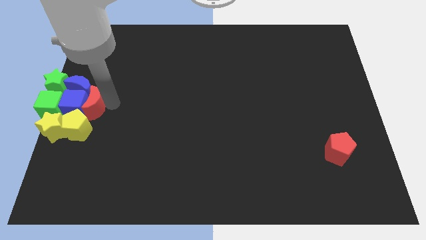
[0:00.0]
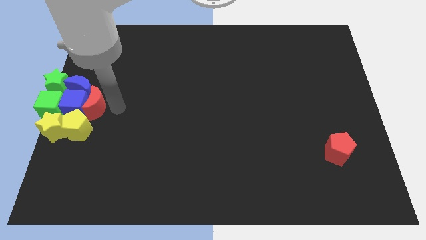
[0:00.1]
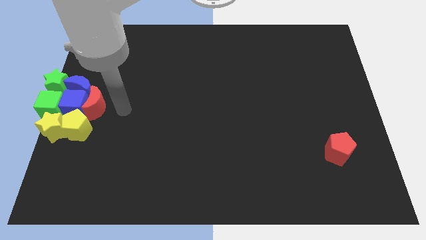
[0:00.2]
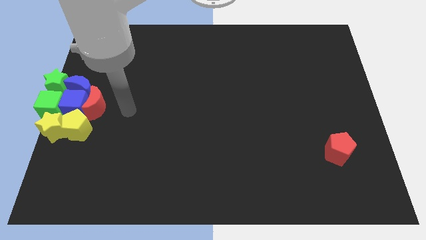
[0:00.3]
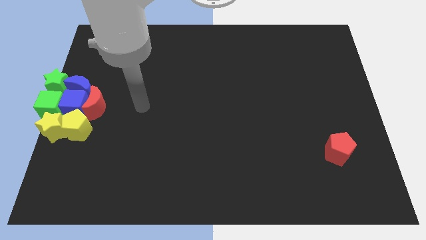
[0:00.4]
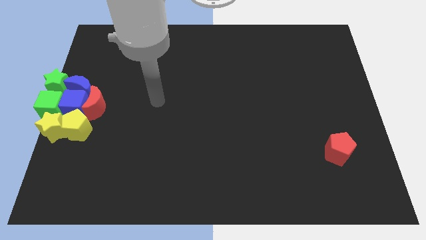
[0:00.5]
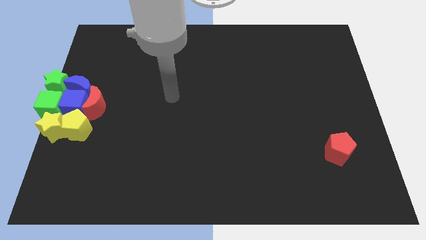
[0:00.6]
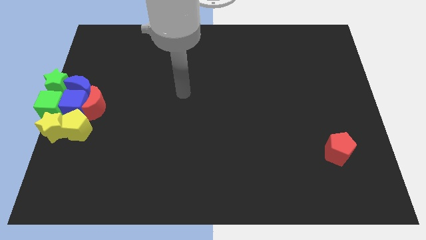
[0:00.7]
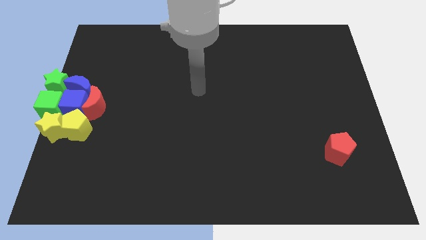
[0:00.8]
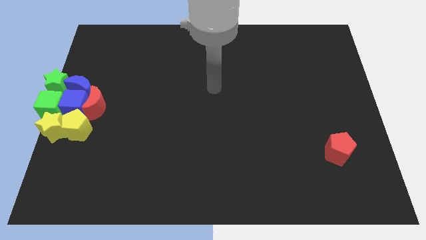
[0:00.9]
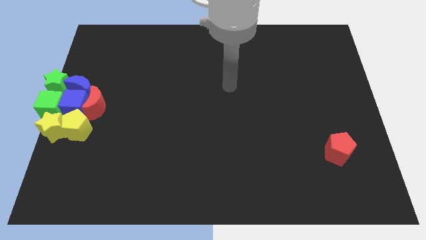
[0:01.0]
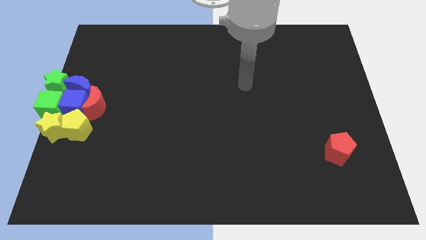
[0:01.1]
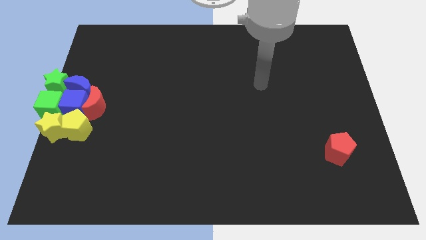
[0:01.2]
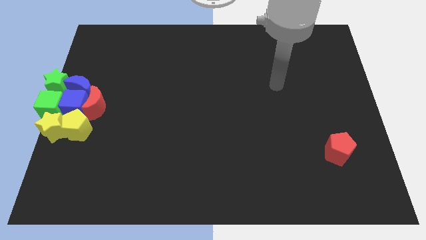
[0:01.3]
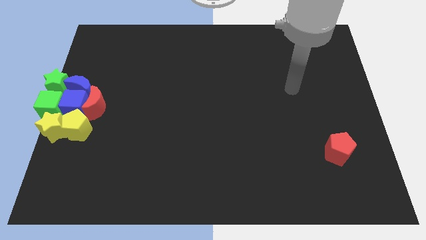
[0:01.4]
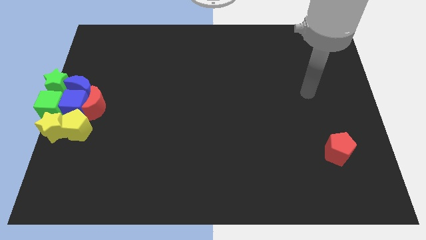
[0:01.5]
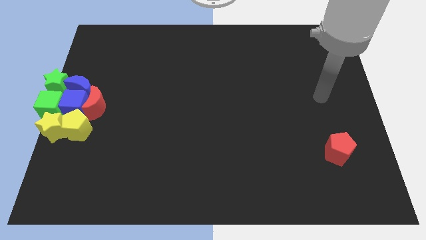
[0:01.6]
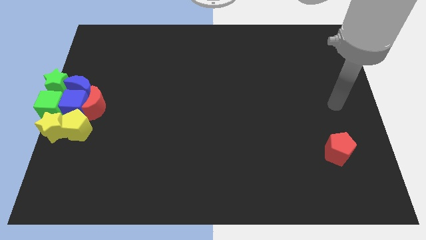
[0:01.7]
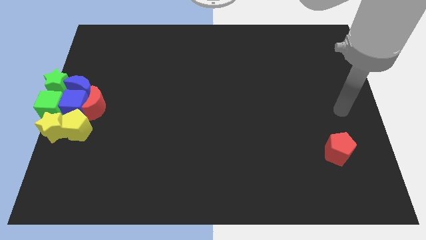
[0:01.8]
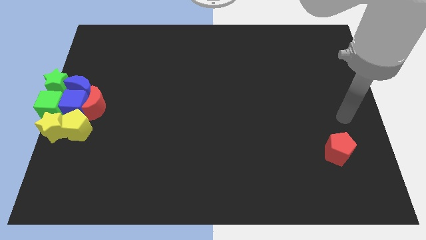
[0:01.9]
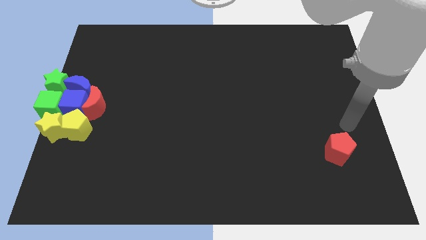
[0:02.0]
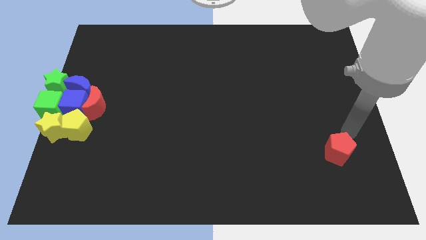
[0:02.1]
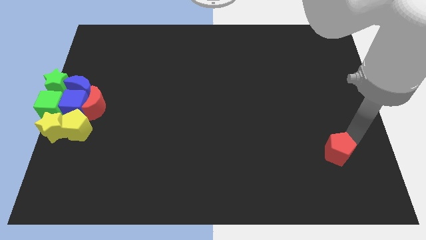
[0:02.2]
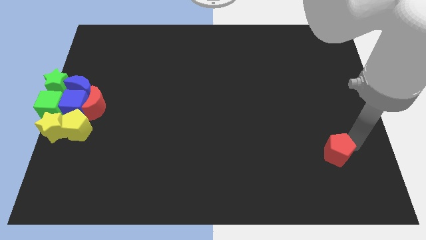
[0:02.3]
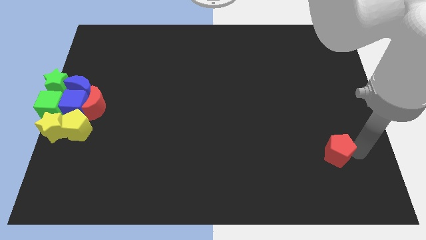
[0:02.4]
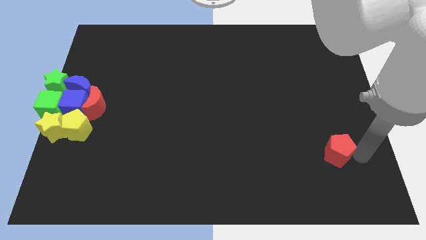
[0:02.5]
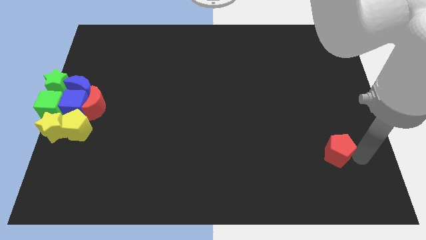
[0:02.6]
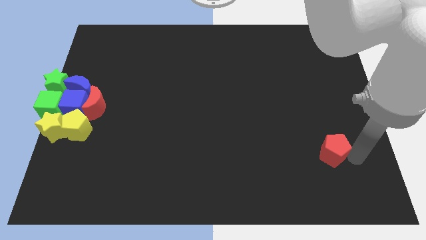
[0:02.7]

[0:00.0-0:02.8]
move your arm away from the red moon

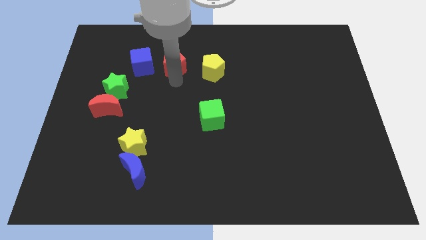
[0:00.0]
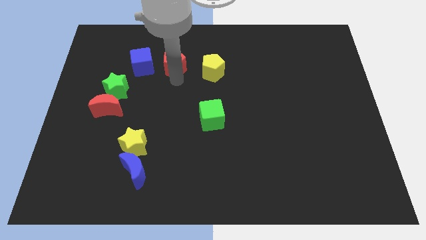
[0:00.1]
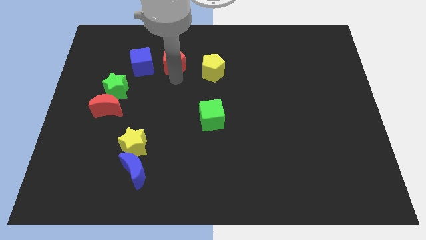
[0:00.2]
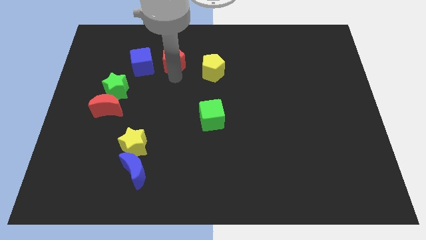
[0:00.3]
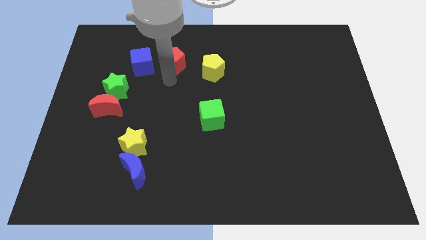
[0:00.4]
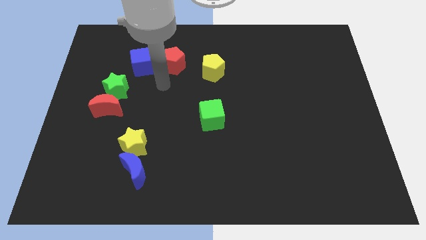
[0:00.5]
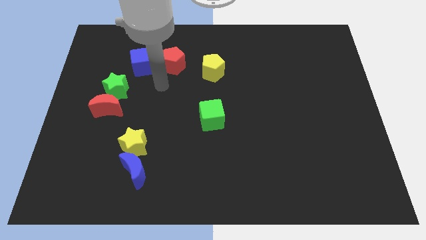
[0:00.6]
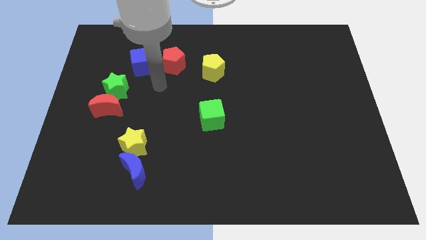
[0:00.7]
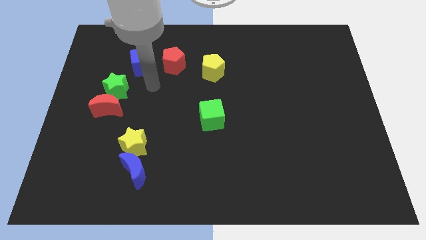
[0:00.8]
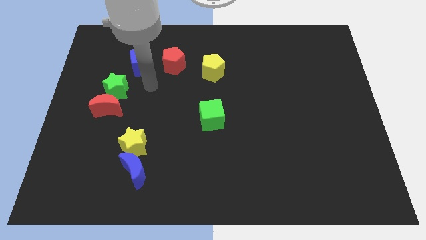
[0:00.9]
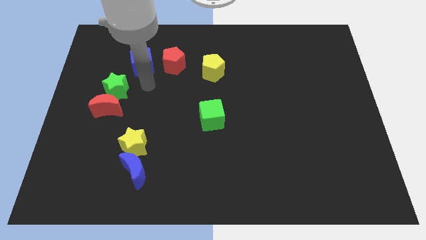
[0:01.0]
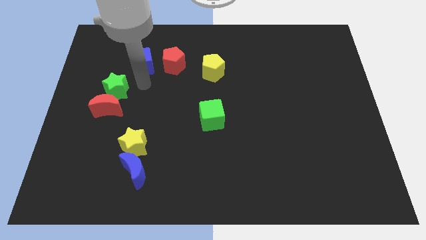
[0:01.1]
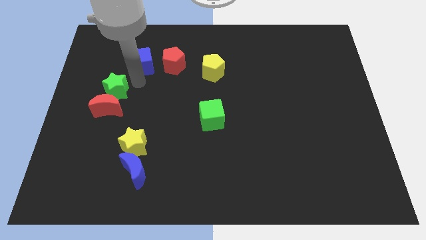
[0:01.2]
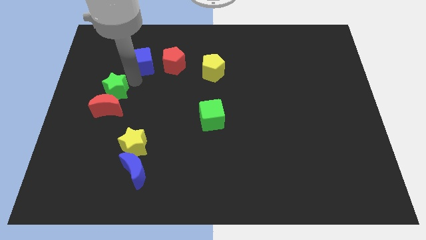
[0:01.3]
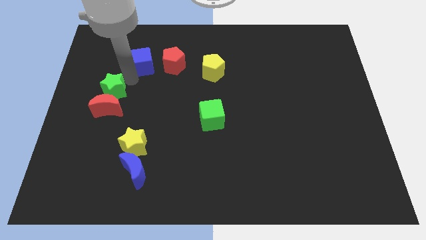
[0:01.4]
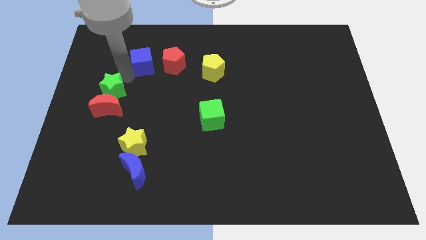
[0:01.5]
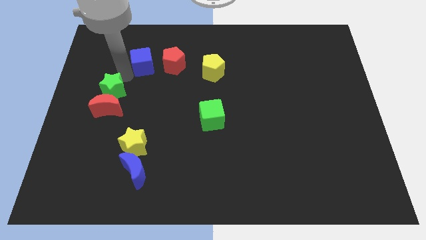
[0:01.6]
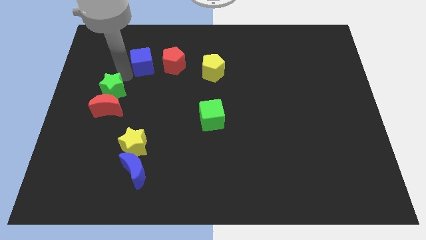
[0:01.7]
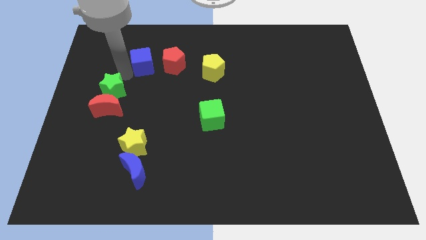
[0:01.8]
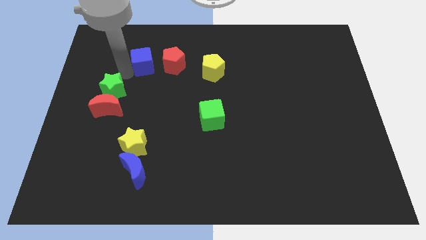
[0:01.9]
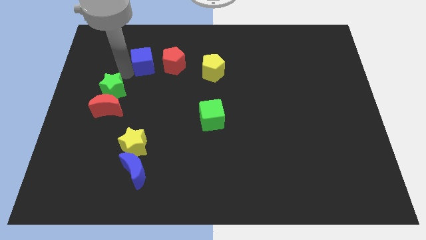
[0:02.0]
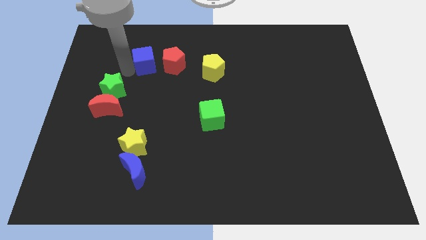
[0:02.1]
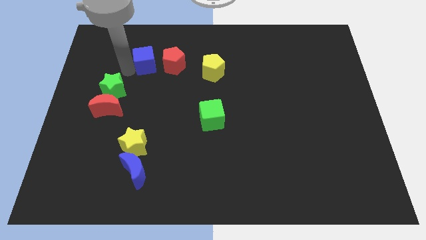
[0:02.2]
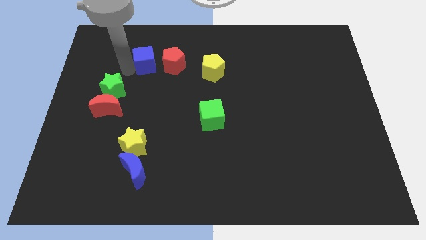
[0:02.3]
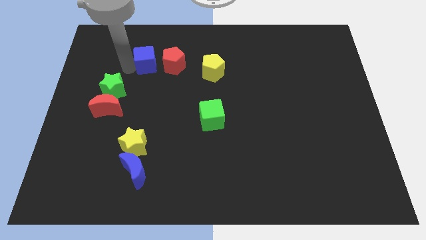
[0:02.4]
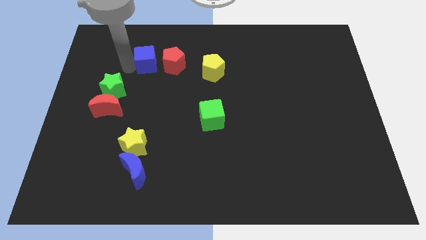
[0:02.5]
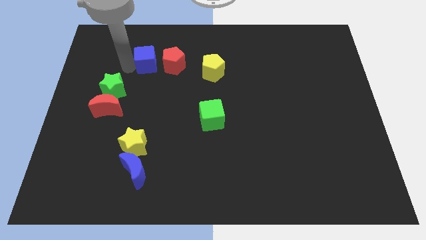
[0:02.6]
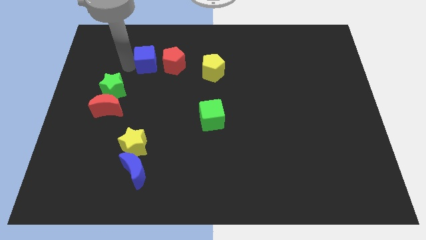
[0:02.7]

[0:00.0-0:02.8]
move the blue cube close to the left side of the red pentagon

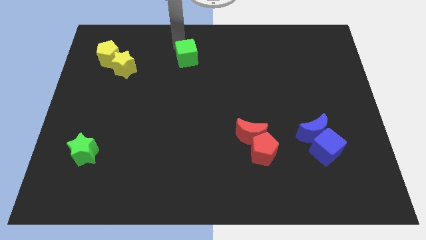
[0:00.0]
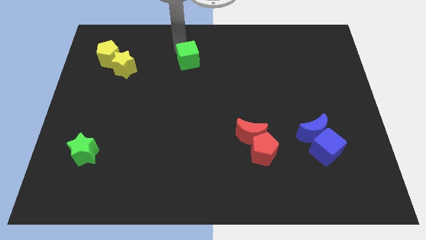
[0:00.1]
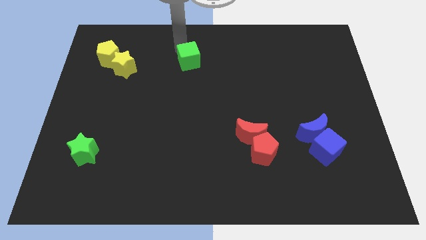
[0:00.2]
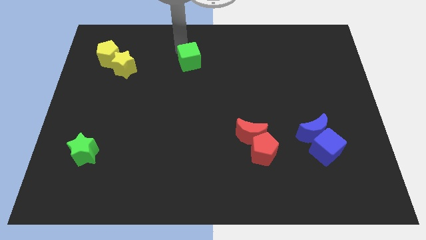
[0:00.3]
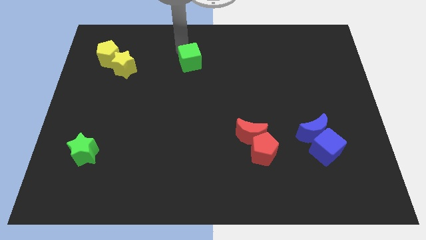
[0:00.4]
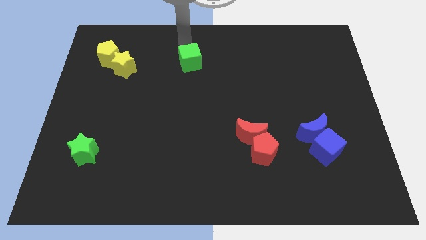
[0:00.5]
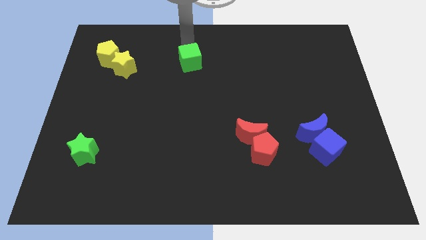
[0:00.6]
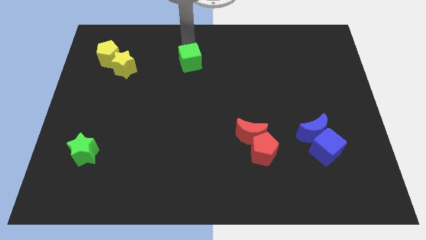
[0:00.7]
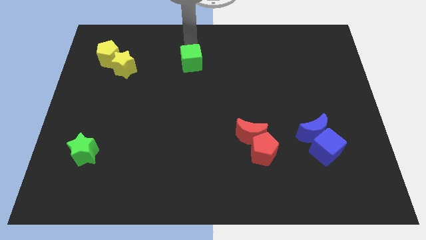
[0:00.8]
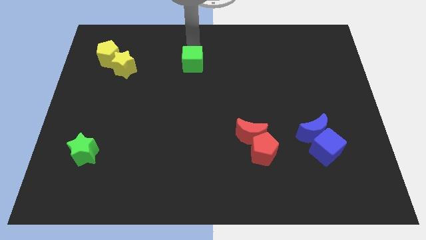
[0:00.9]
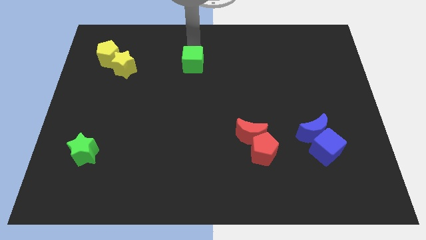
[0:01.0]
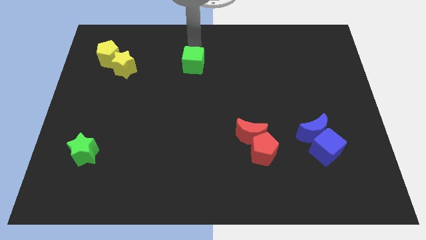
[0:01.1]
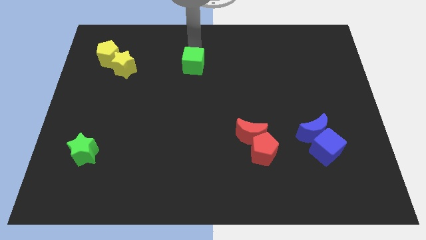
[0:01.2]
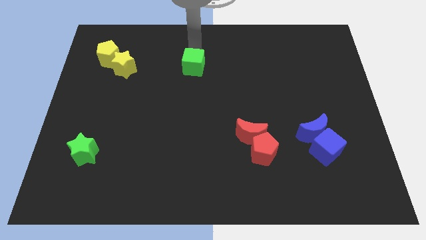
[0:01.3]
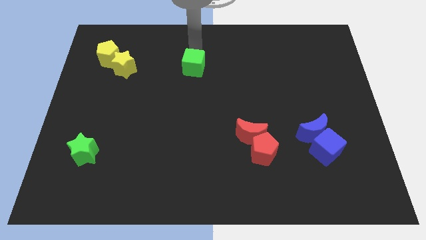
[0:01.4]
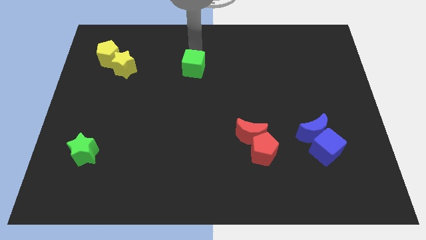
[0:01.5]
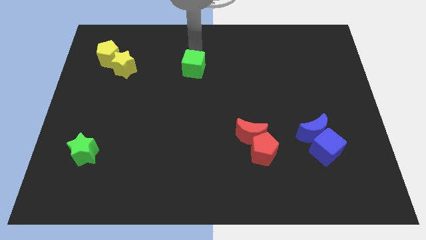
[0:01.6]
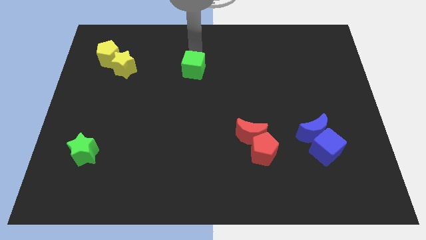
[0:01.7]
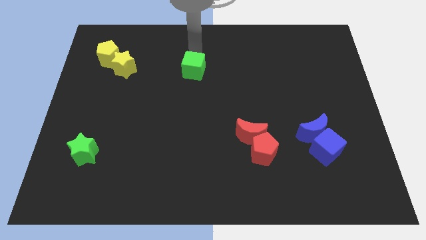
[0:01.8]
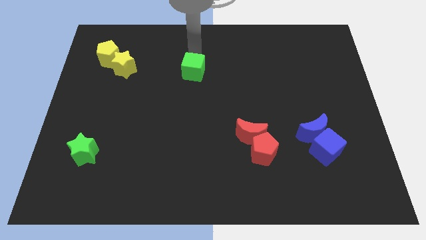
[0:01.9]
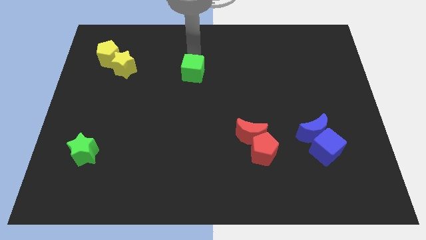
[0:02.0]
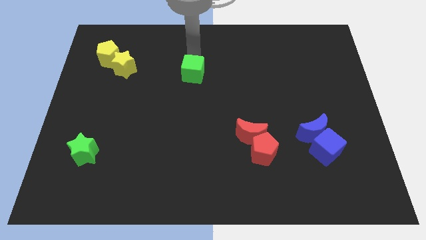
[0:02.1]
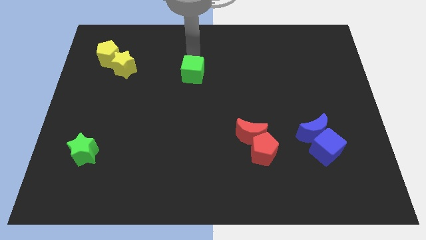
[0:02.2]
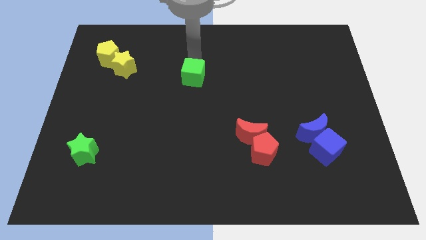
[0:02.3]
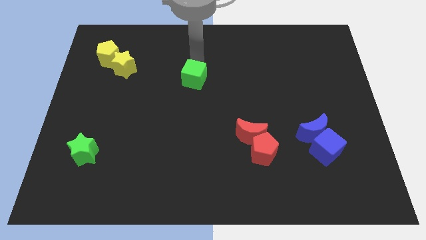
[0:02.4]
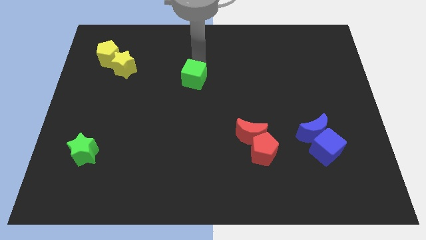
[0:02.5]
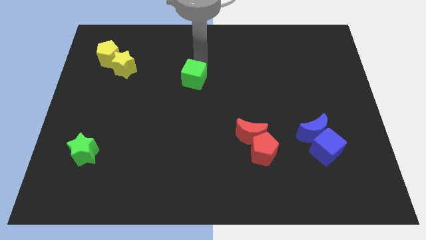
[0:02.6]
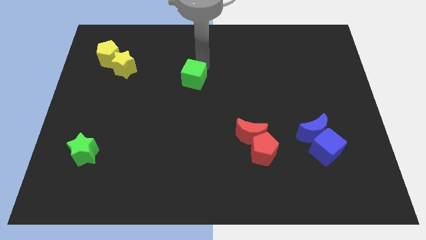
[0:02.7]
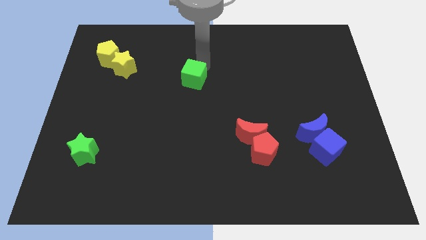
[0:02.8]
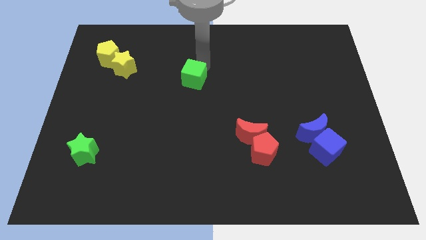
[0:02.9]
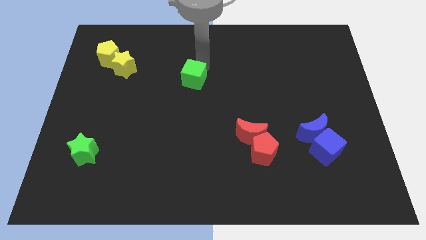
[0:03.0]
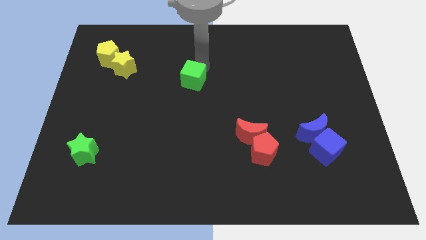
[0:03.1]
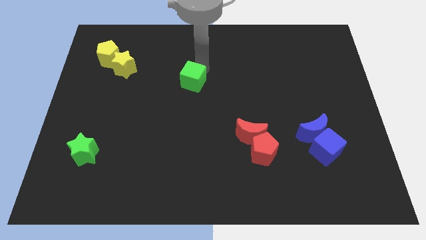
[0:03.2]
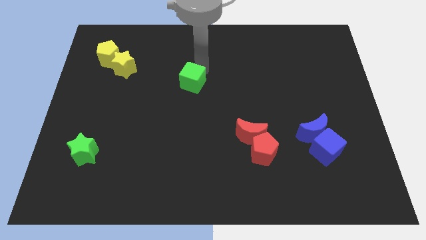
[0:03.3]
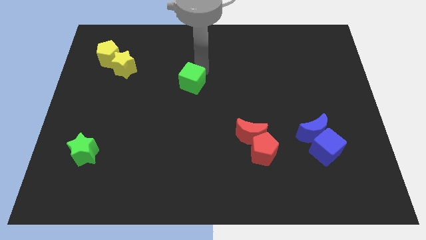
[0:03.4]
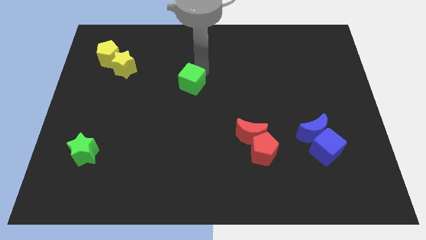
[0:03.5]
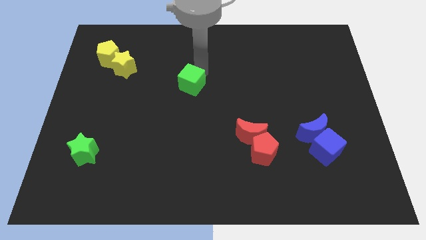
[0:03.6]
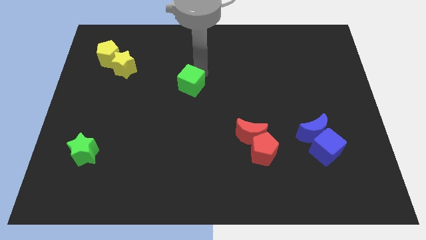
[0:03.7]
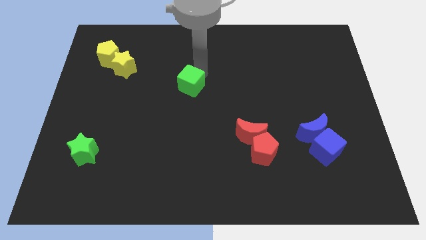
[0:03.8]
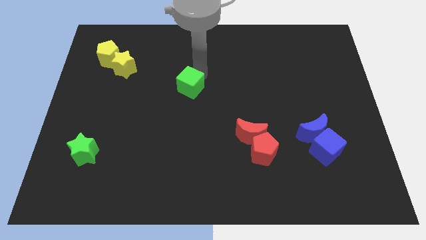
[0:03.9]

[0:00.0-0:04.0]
put the green cube diagonally bottom right to the yellow star
